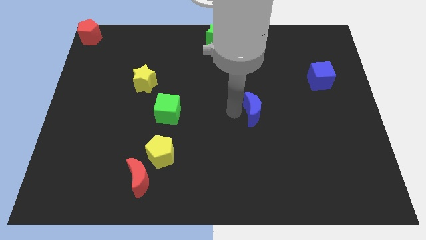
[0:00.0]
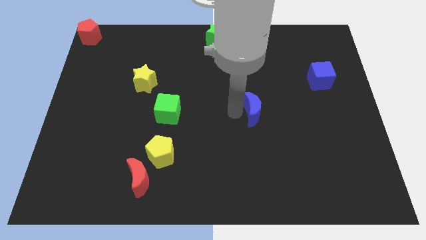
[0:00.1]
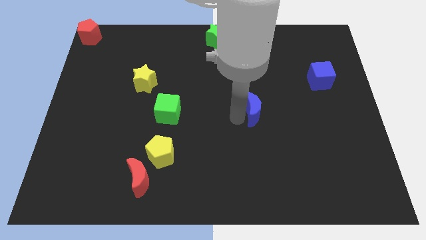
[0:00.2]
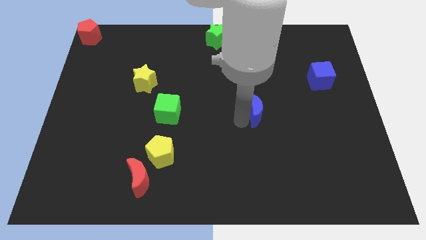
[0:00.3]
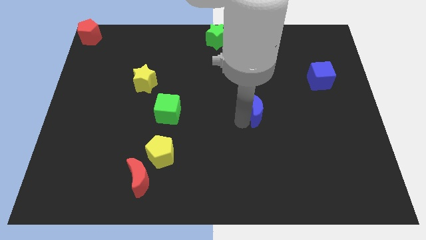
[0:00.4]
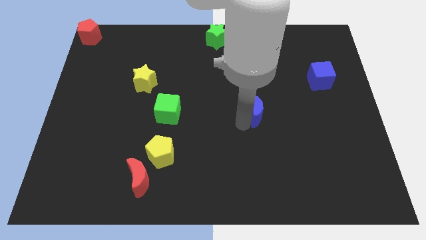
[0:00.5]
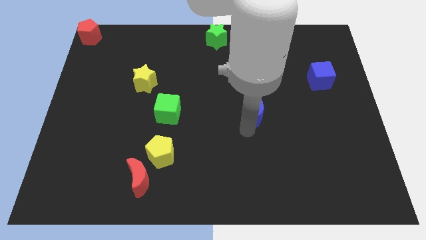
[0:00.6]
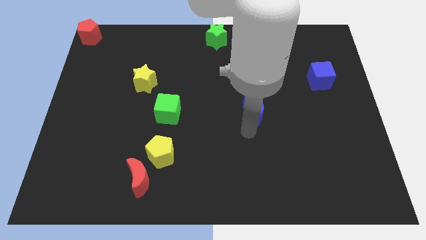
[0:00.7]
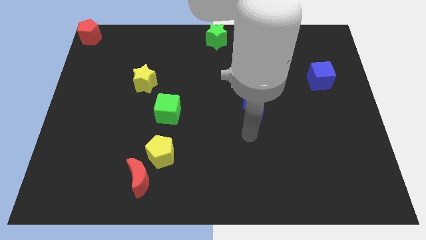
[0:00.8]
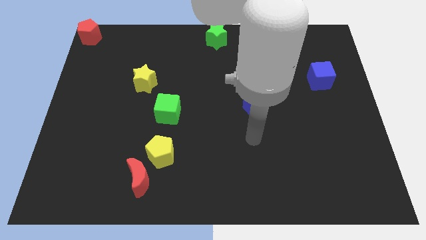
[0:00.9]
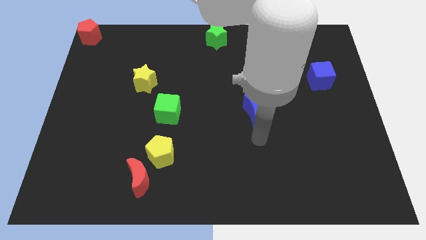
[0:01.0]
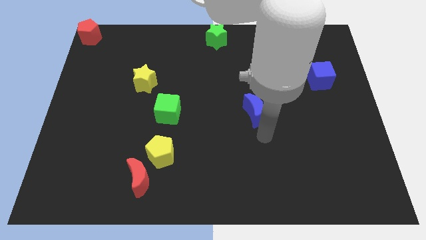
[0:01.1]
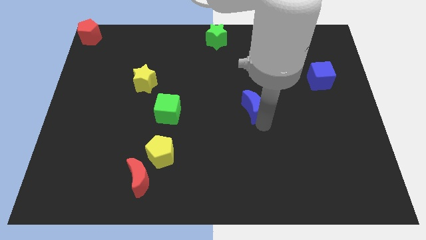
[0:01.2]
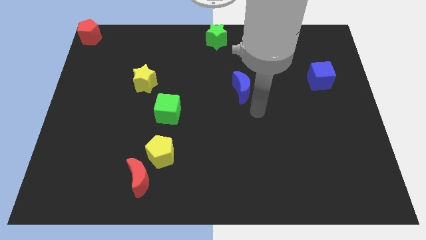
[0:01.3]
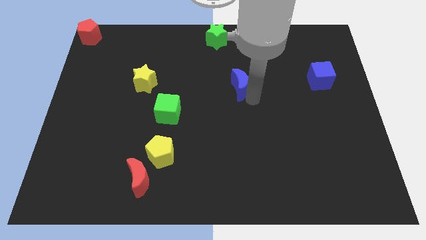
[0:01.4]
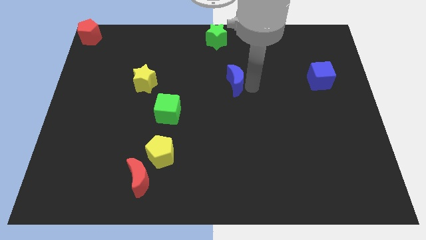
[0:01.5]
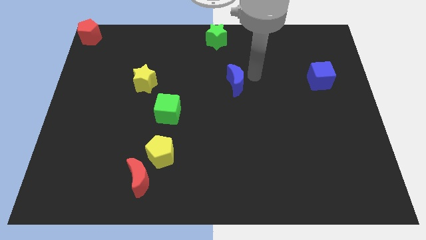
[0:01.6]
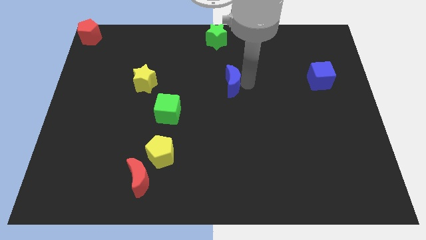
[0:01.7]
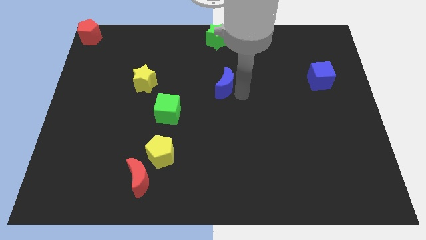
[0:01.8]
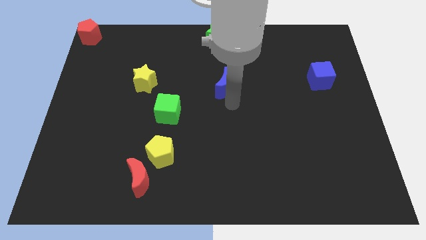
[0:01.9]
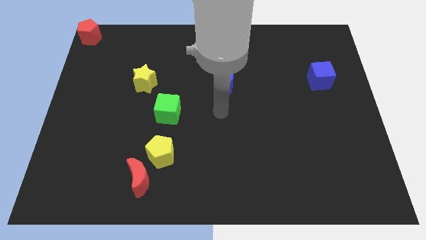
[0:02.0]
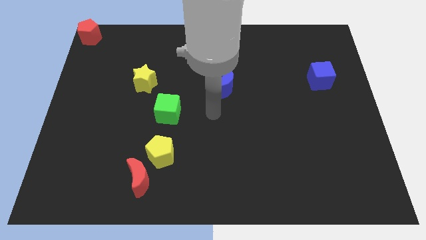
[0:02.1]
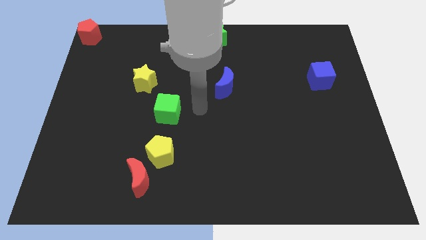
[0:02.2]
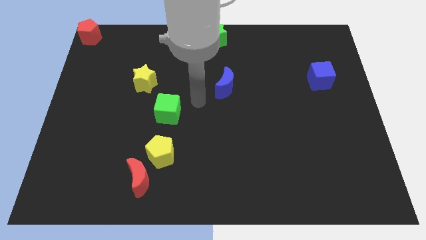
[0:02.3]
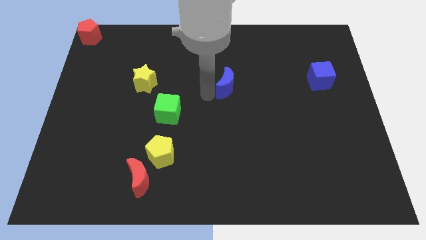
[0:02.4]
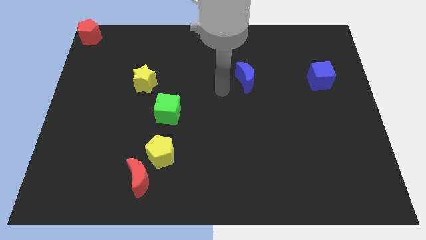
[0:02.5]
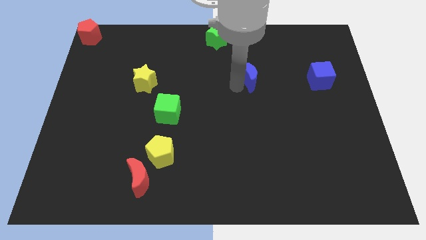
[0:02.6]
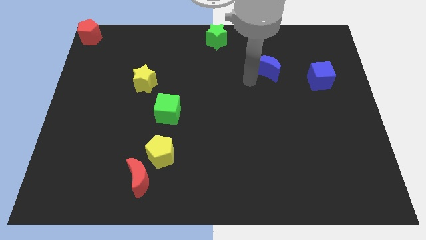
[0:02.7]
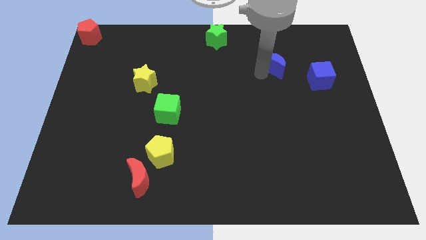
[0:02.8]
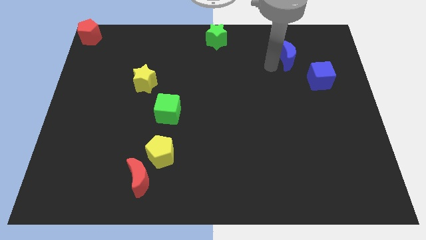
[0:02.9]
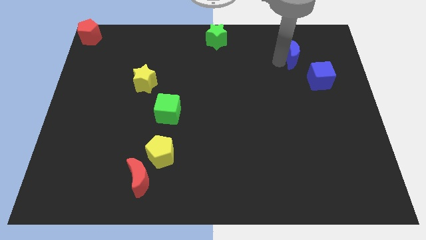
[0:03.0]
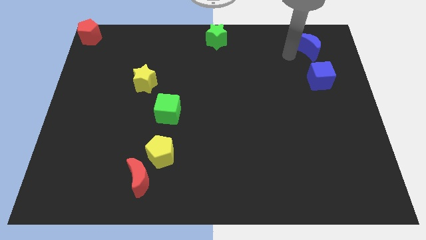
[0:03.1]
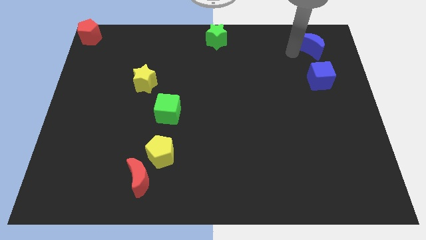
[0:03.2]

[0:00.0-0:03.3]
push the blue crescent towards the right top of the board

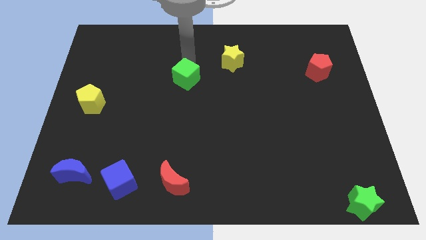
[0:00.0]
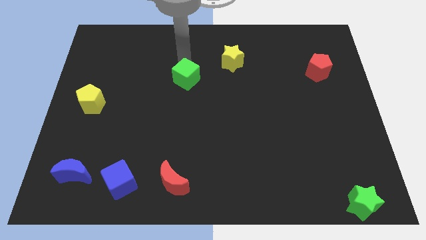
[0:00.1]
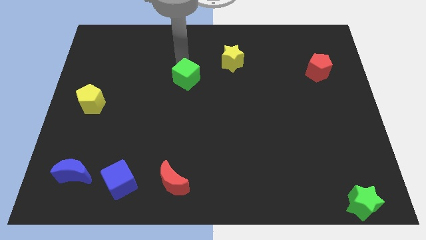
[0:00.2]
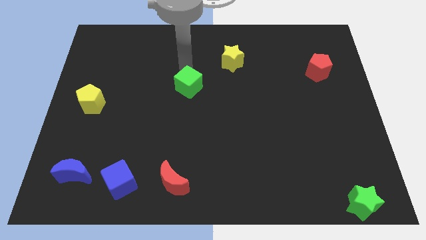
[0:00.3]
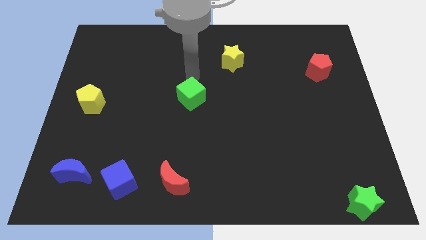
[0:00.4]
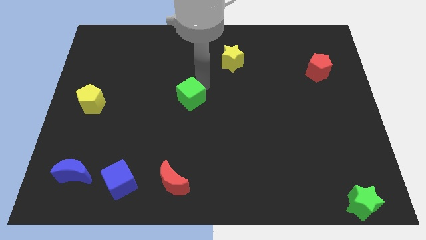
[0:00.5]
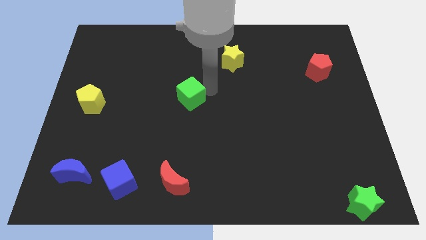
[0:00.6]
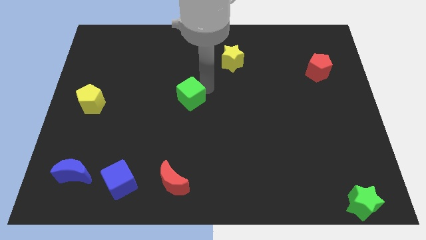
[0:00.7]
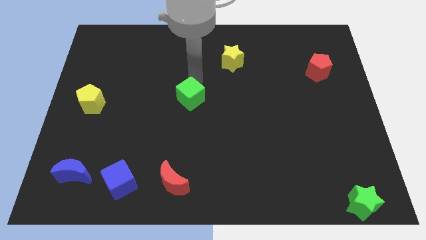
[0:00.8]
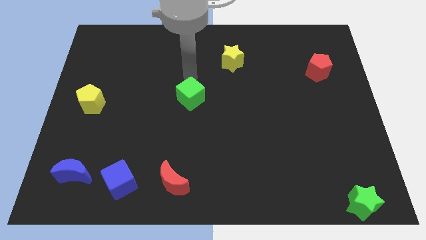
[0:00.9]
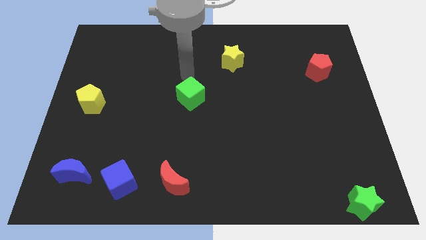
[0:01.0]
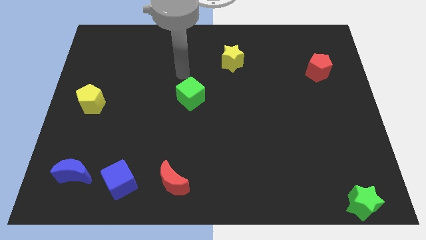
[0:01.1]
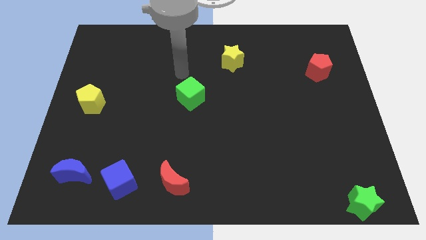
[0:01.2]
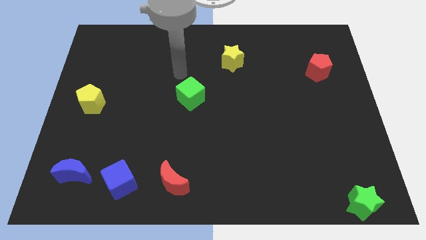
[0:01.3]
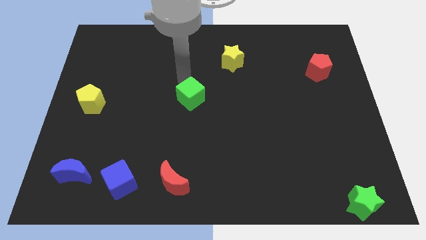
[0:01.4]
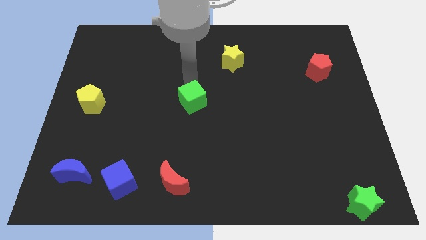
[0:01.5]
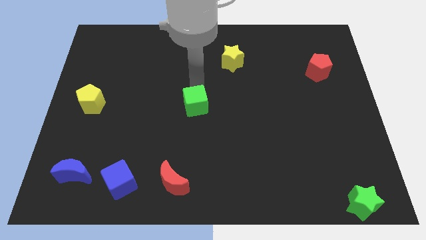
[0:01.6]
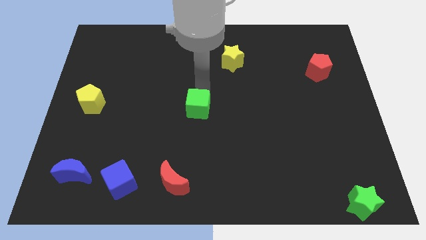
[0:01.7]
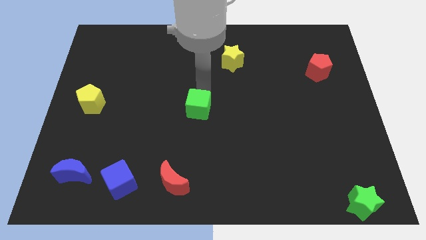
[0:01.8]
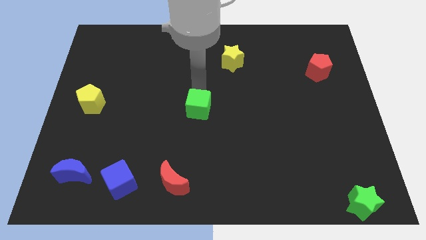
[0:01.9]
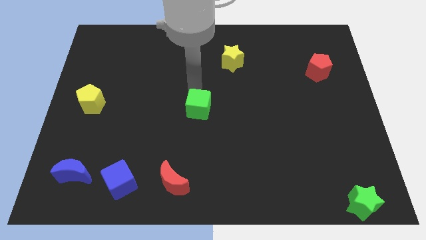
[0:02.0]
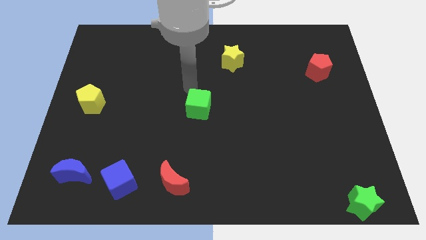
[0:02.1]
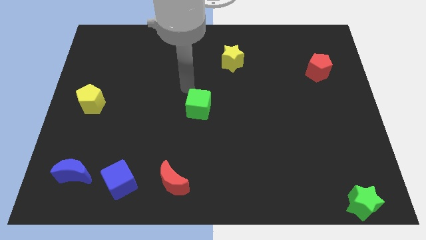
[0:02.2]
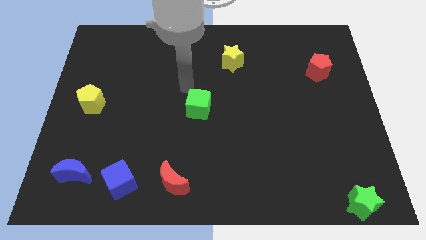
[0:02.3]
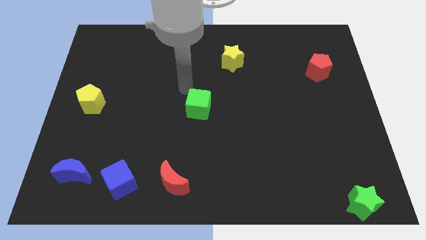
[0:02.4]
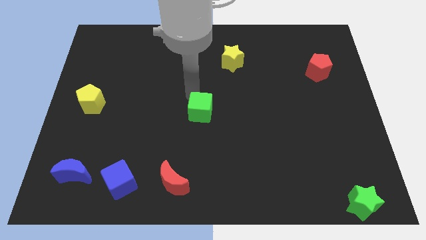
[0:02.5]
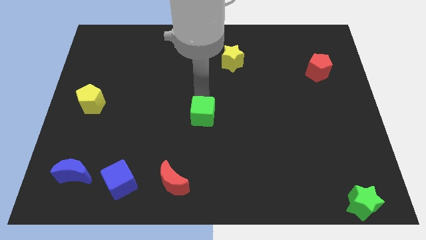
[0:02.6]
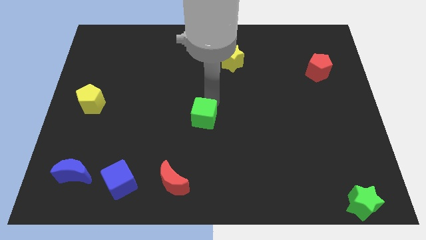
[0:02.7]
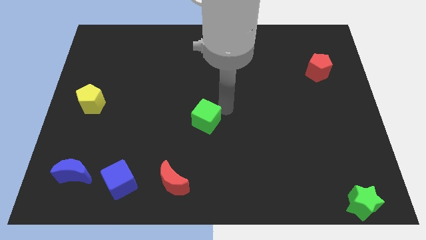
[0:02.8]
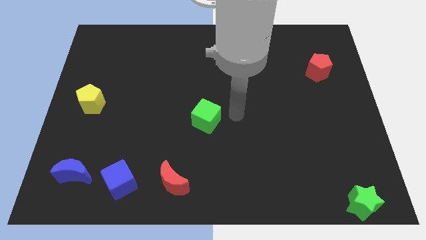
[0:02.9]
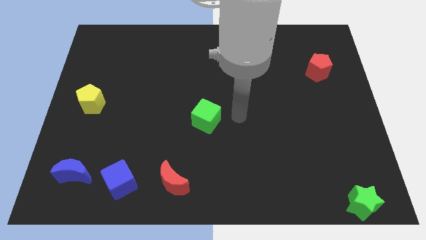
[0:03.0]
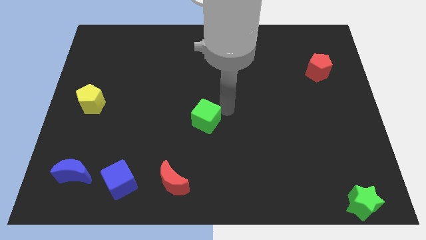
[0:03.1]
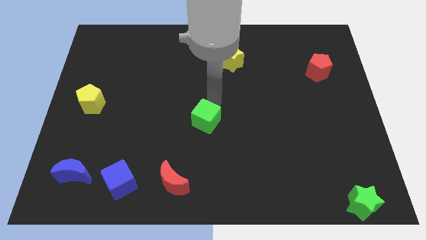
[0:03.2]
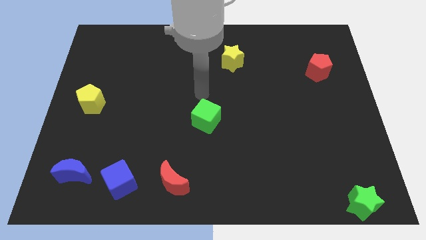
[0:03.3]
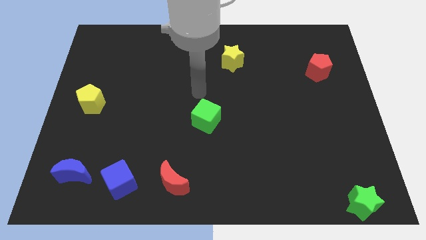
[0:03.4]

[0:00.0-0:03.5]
move the green cube to the center of the board

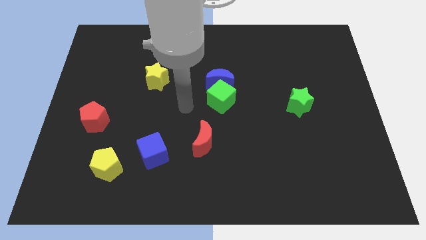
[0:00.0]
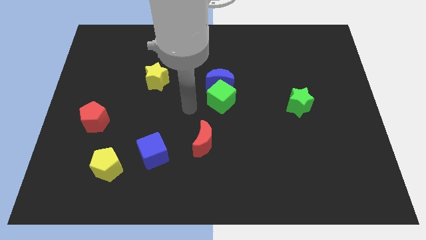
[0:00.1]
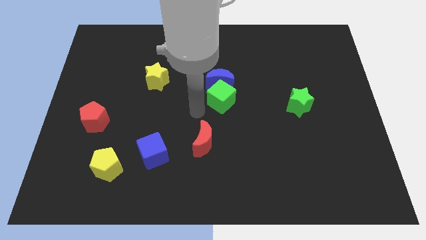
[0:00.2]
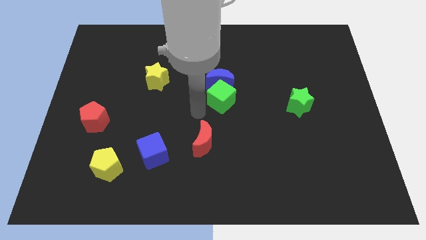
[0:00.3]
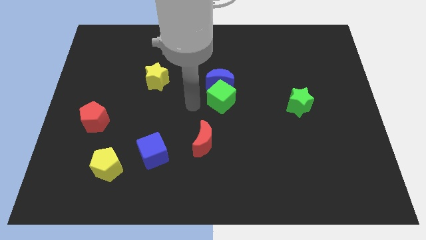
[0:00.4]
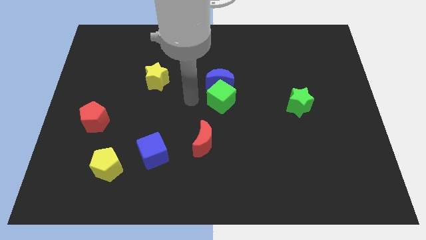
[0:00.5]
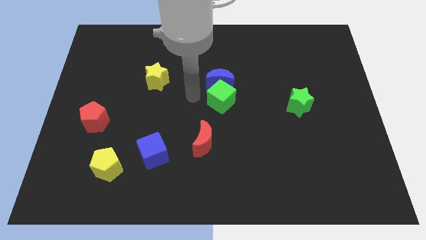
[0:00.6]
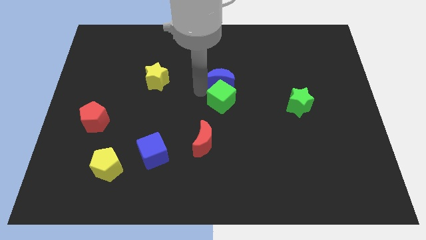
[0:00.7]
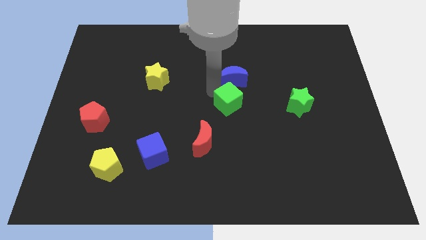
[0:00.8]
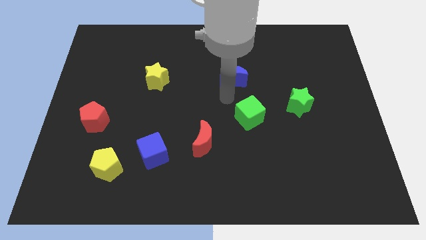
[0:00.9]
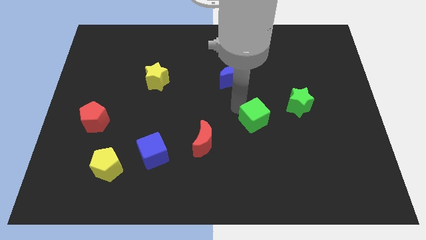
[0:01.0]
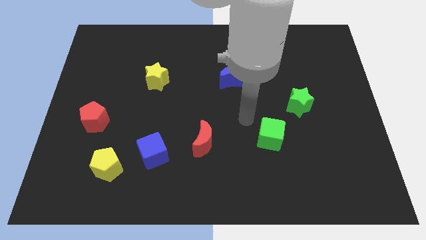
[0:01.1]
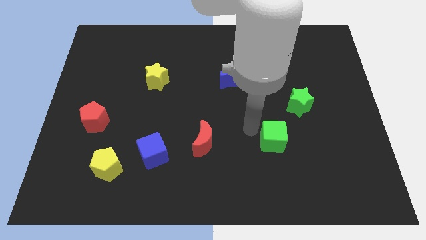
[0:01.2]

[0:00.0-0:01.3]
move the green cube at the right side of the red moon

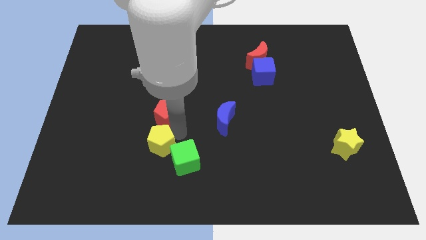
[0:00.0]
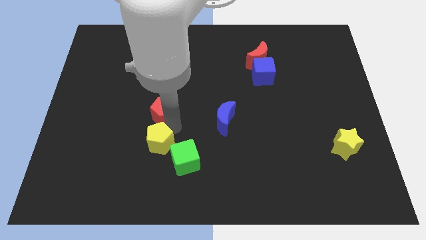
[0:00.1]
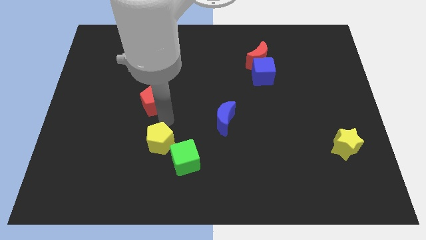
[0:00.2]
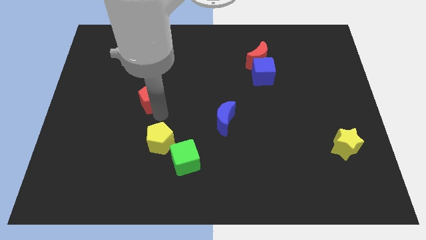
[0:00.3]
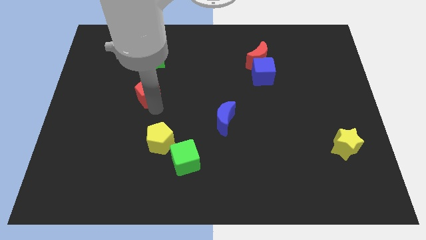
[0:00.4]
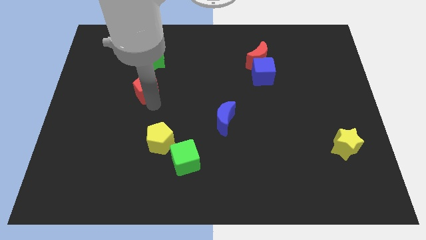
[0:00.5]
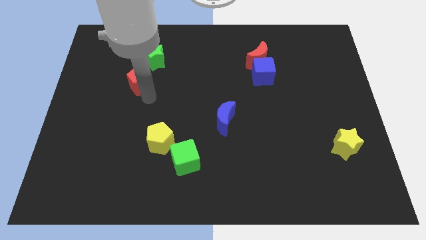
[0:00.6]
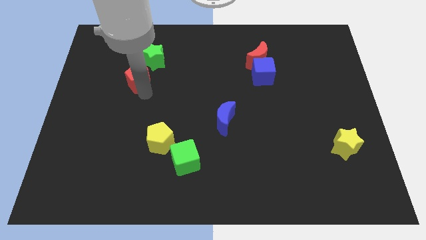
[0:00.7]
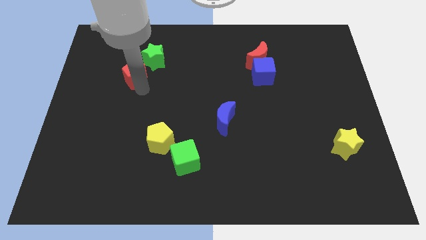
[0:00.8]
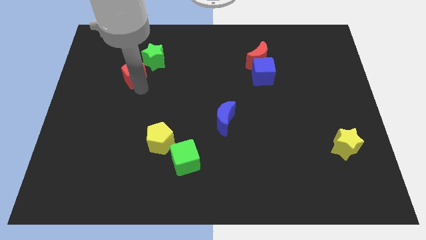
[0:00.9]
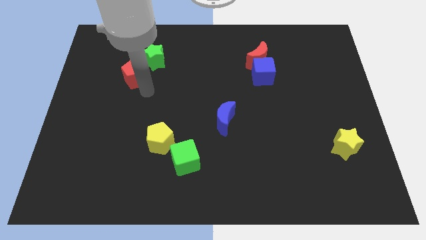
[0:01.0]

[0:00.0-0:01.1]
separate the red pentagon from the yellow pentagon
